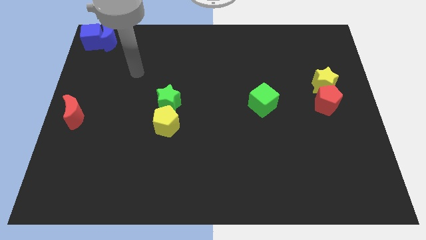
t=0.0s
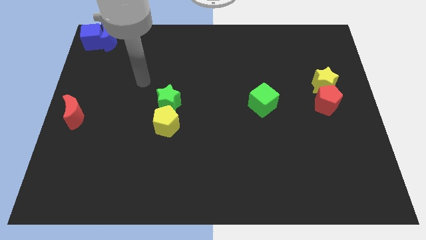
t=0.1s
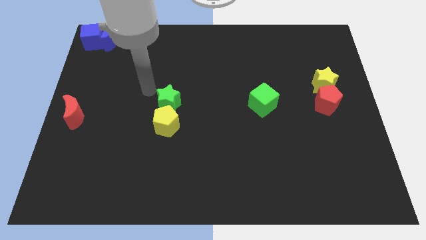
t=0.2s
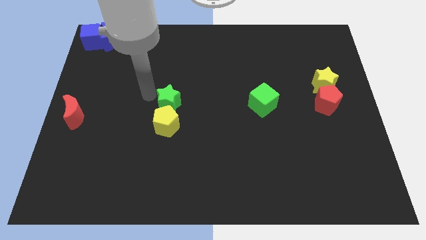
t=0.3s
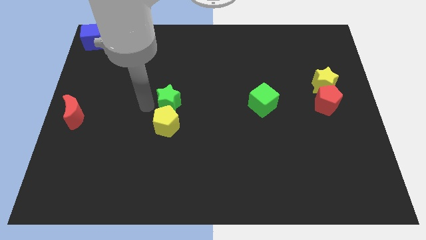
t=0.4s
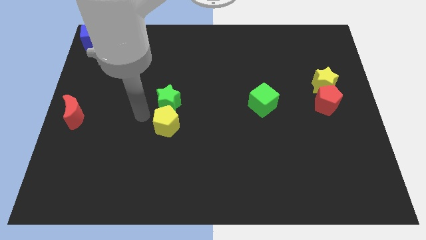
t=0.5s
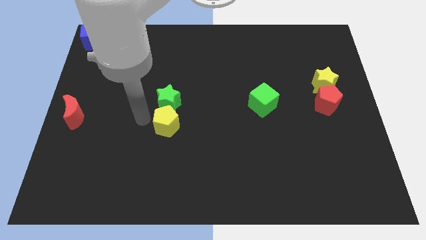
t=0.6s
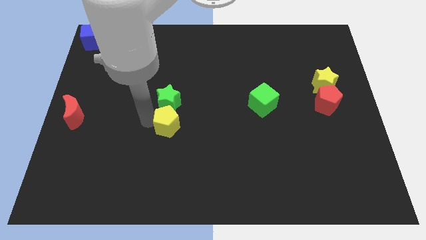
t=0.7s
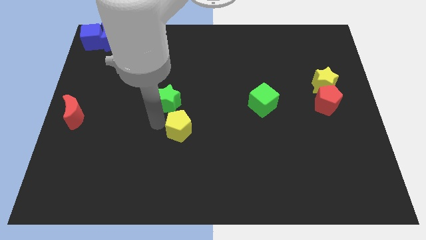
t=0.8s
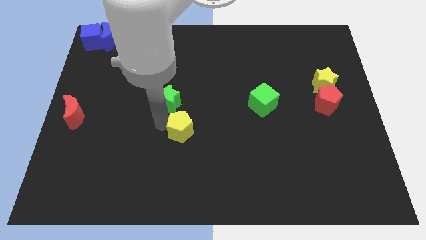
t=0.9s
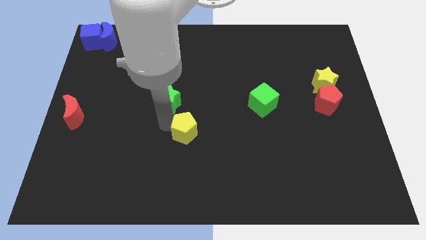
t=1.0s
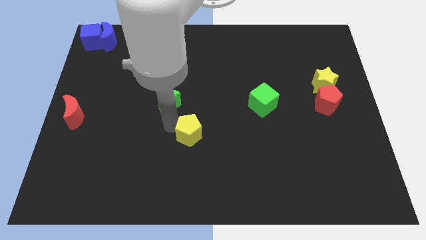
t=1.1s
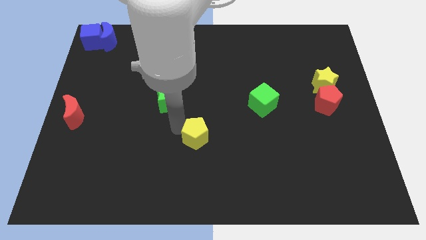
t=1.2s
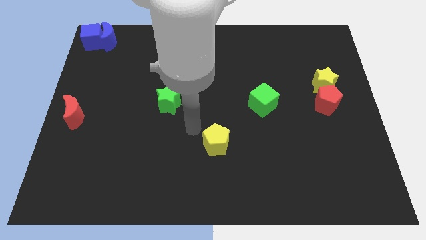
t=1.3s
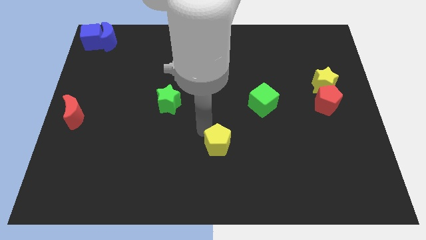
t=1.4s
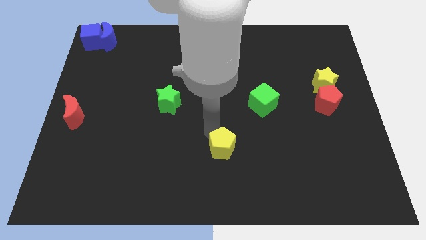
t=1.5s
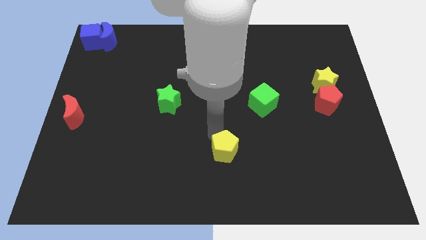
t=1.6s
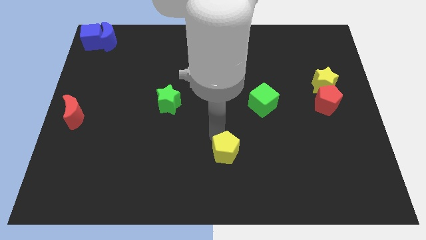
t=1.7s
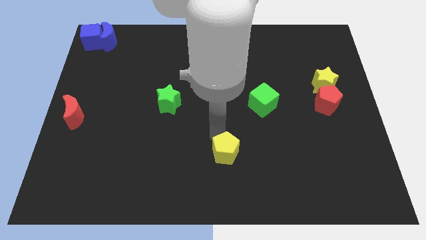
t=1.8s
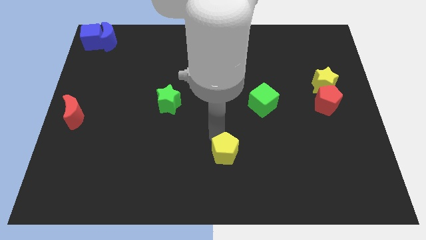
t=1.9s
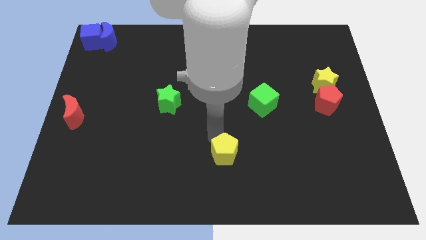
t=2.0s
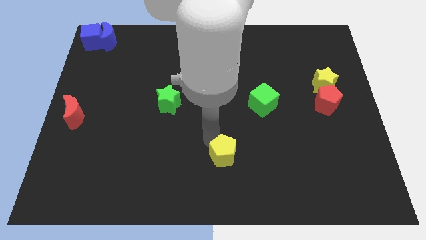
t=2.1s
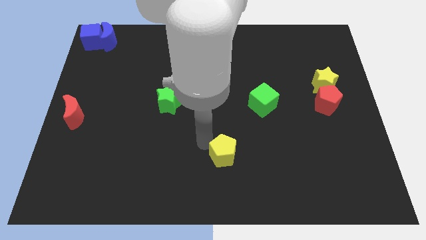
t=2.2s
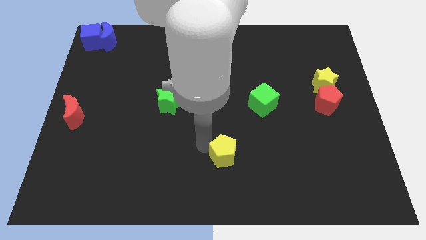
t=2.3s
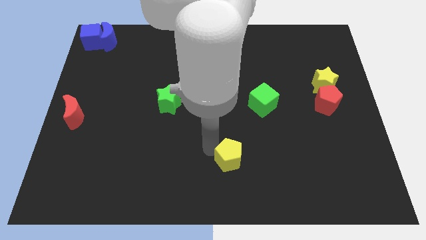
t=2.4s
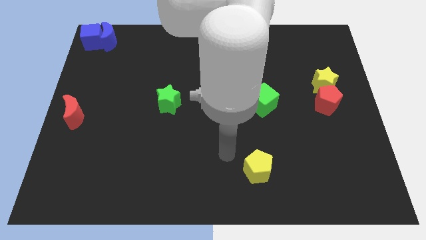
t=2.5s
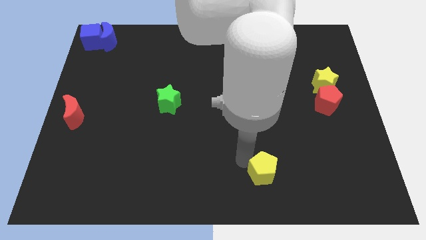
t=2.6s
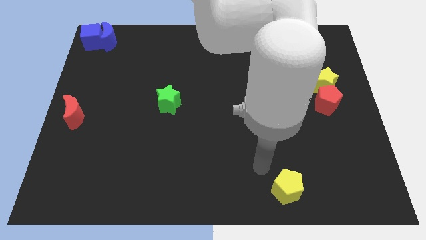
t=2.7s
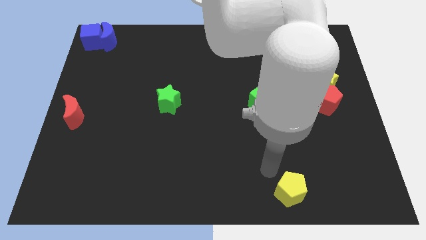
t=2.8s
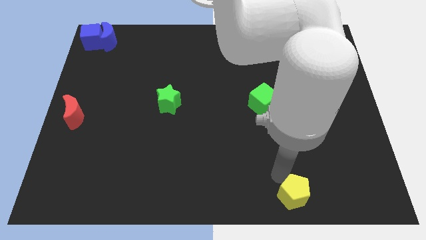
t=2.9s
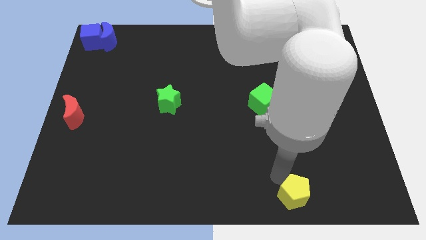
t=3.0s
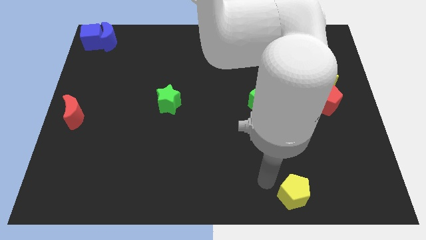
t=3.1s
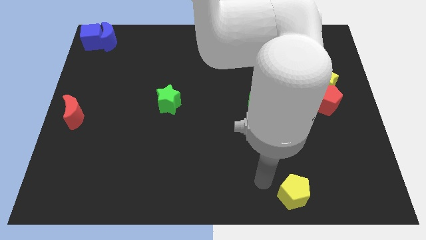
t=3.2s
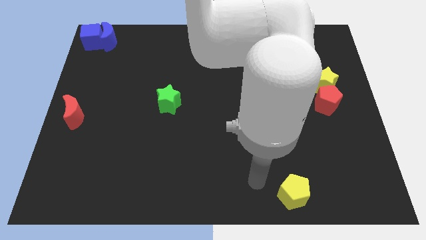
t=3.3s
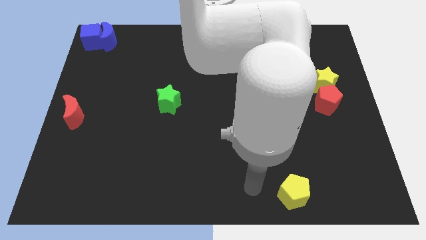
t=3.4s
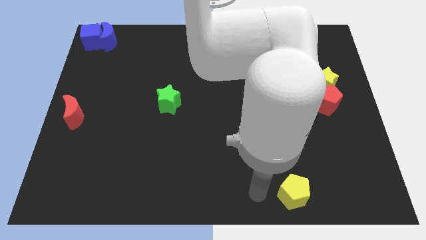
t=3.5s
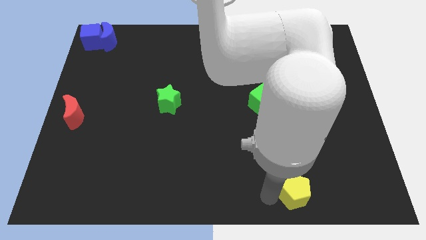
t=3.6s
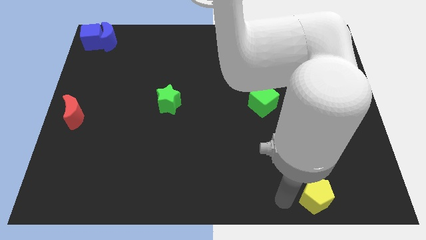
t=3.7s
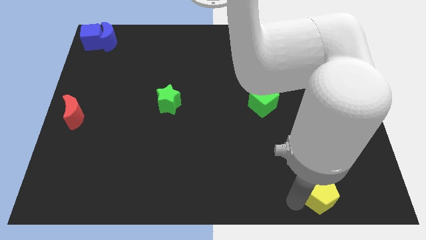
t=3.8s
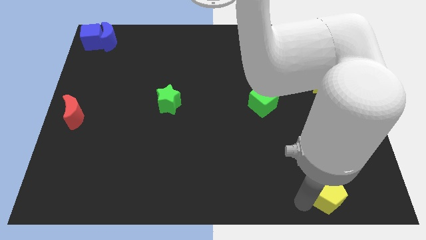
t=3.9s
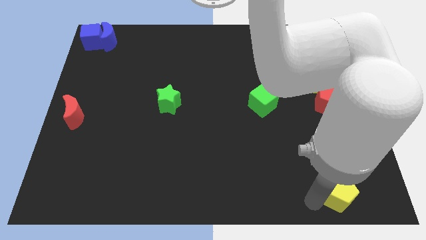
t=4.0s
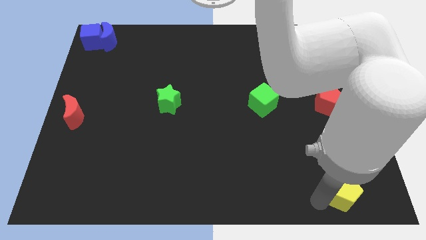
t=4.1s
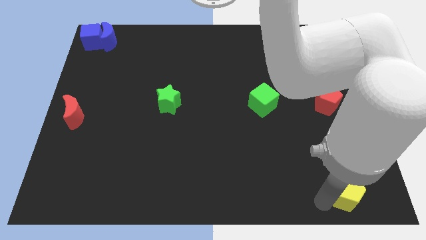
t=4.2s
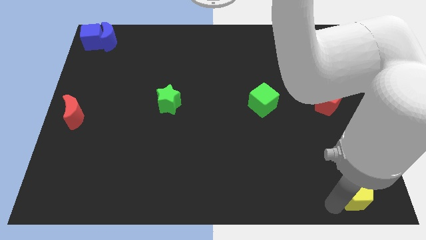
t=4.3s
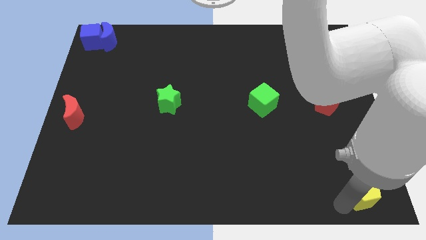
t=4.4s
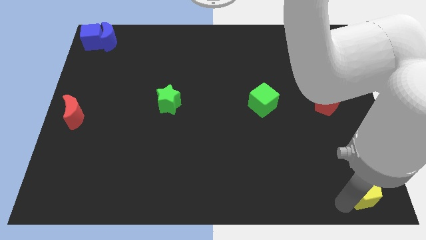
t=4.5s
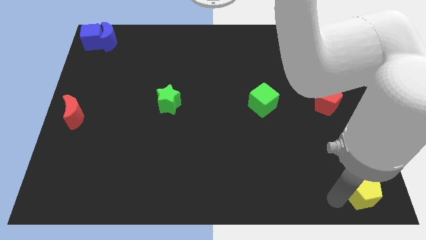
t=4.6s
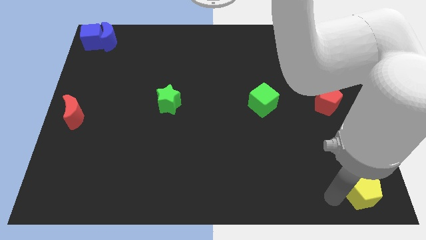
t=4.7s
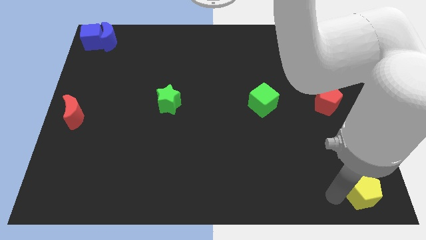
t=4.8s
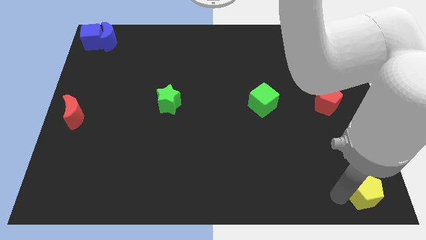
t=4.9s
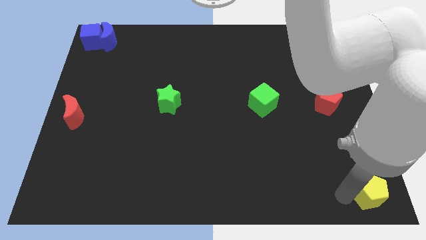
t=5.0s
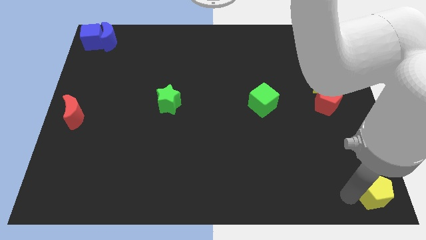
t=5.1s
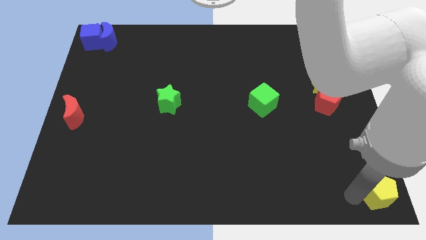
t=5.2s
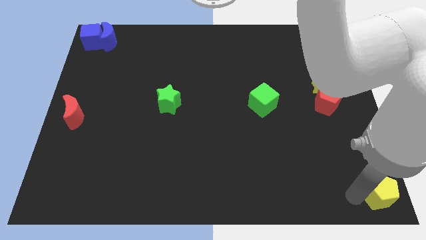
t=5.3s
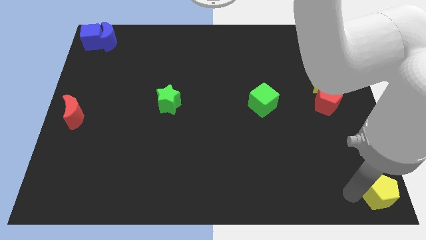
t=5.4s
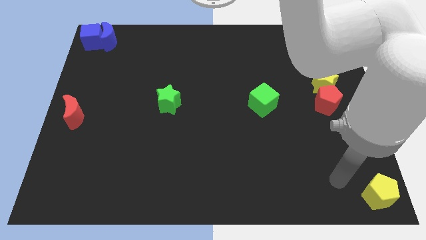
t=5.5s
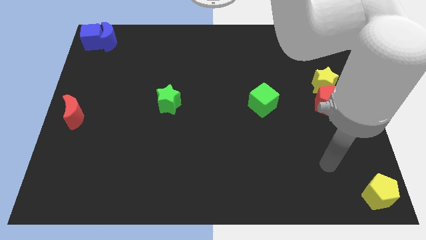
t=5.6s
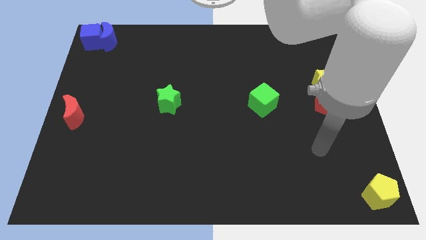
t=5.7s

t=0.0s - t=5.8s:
move the yellow pentagon to the bottom right corner

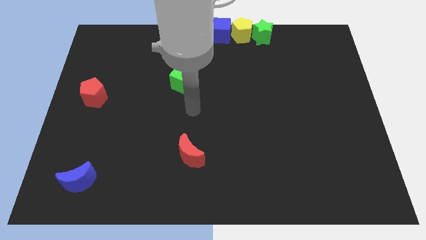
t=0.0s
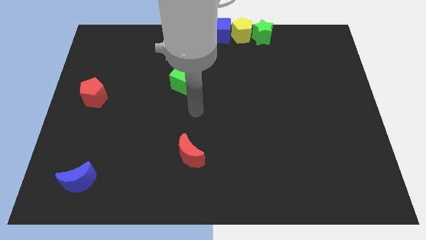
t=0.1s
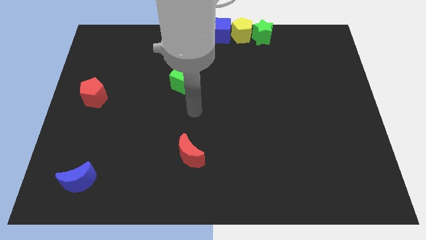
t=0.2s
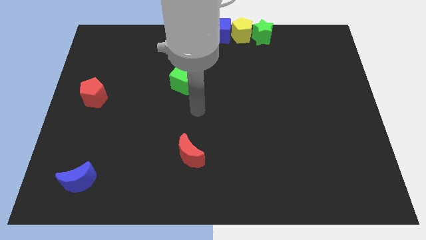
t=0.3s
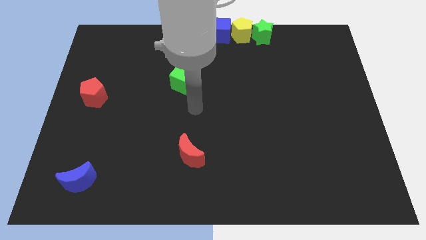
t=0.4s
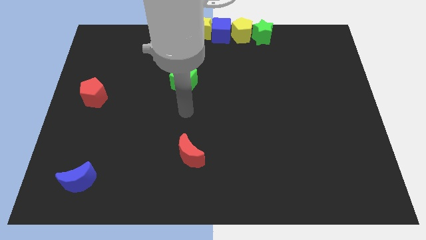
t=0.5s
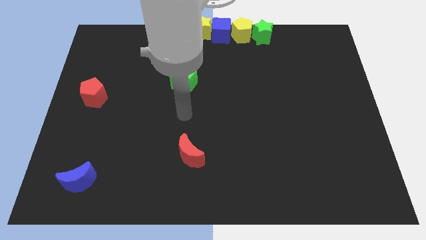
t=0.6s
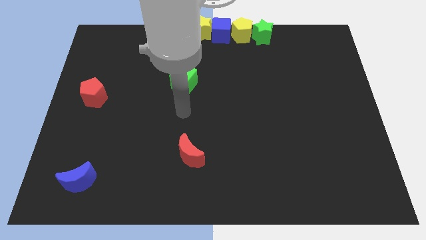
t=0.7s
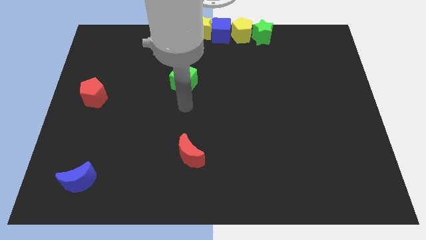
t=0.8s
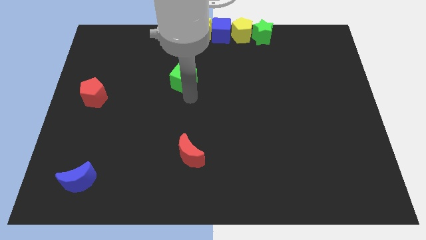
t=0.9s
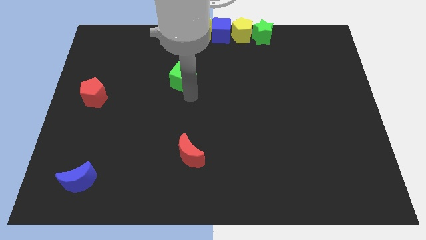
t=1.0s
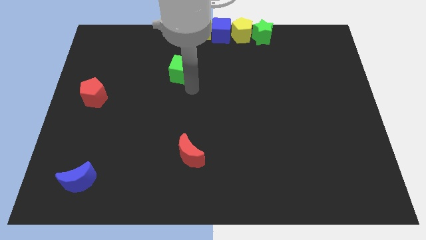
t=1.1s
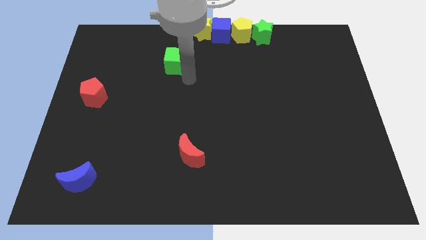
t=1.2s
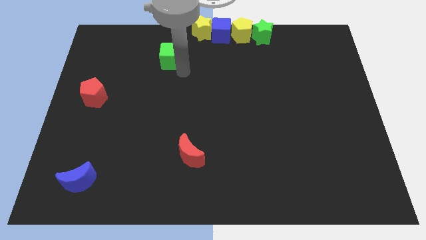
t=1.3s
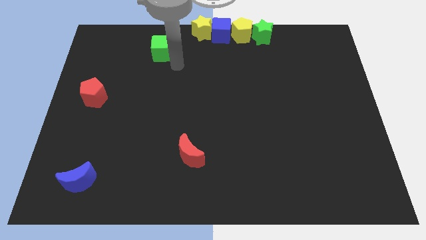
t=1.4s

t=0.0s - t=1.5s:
put the green cube between the yellow star and red pentagon

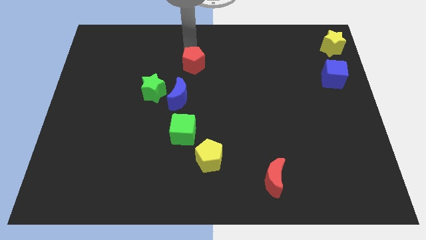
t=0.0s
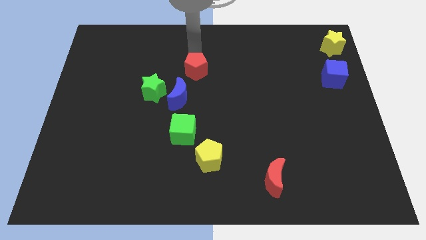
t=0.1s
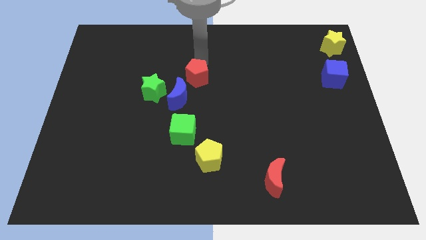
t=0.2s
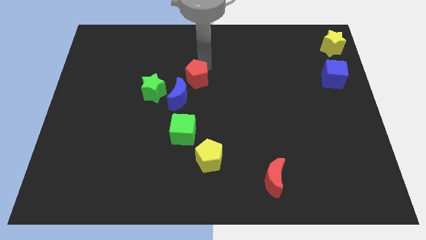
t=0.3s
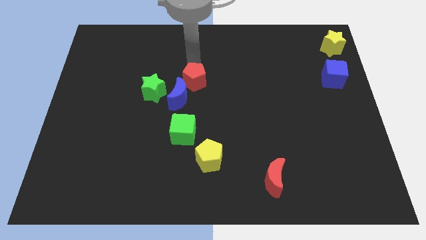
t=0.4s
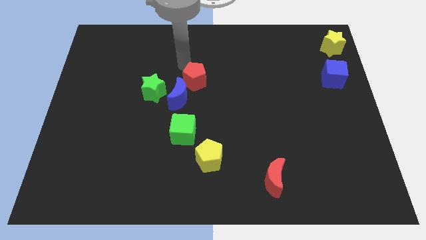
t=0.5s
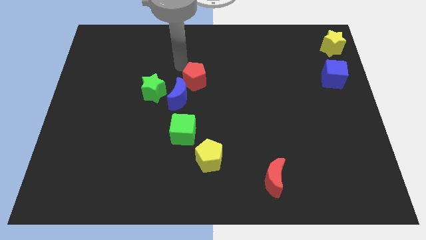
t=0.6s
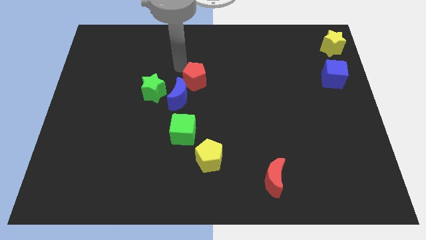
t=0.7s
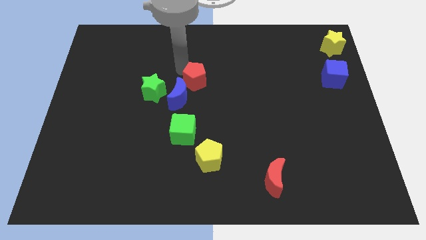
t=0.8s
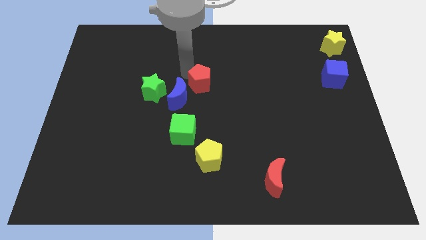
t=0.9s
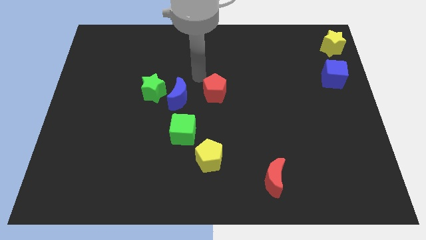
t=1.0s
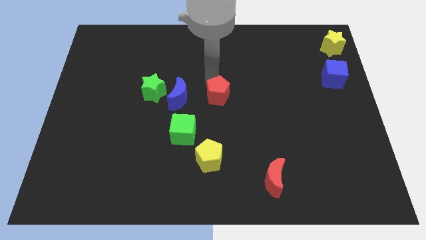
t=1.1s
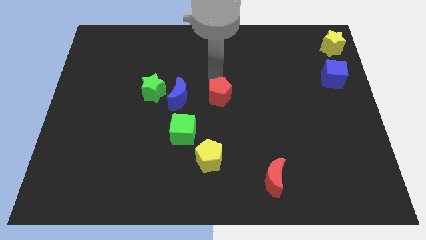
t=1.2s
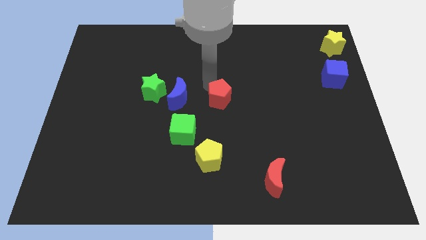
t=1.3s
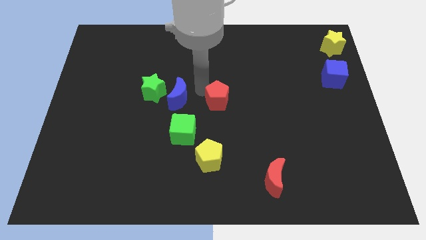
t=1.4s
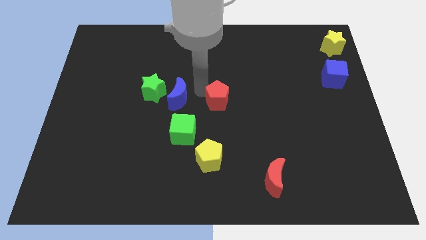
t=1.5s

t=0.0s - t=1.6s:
place the red pentagon to the right side of the blue moon
